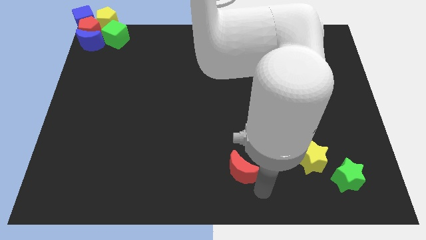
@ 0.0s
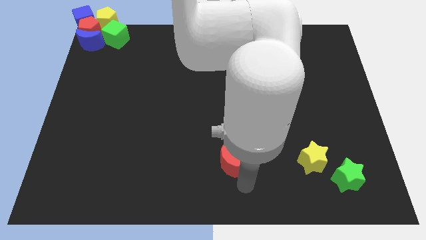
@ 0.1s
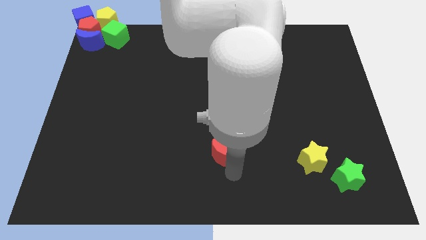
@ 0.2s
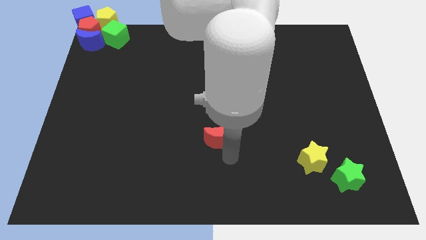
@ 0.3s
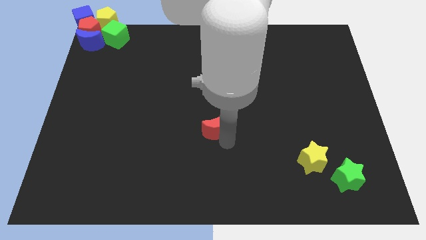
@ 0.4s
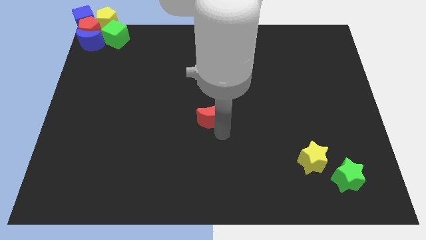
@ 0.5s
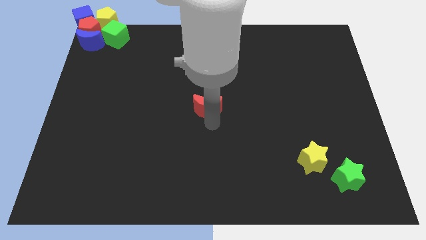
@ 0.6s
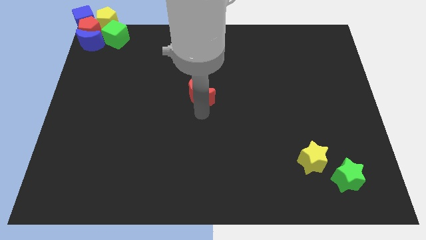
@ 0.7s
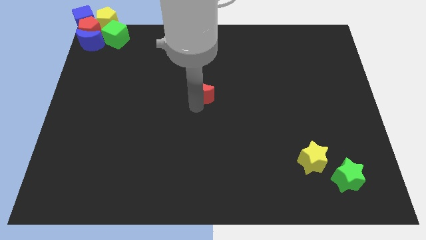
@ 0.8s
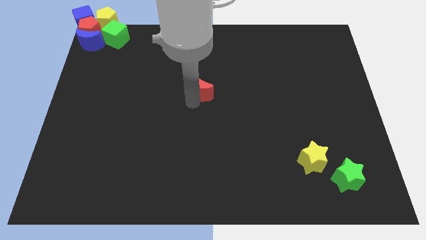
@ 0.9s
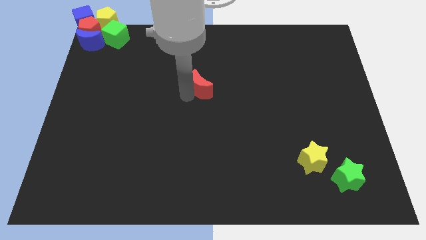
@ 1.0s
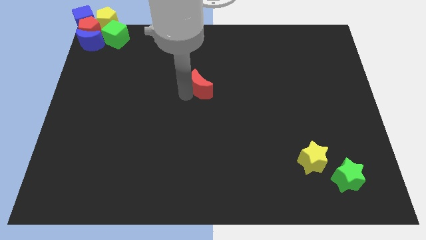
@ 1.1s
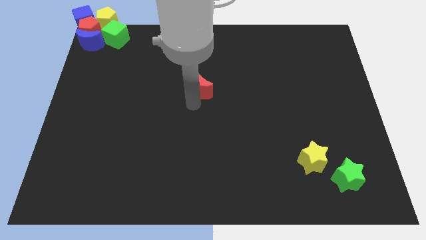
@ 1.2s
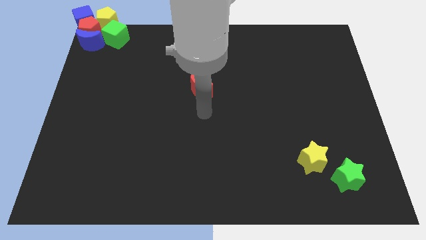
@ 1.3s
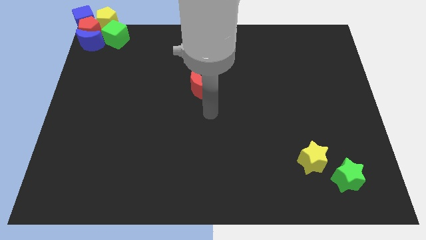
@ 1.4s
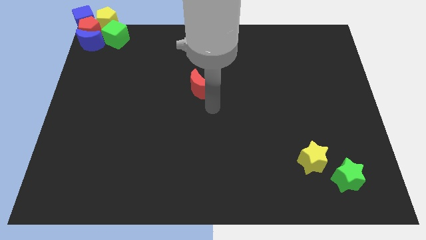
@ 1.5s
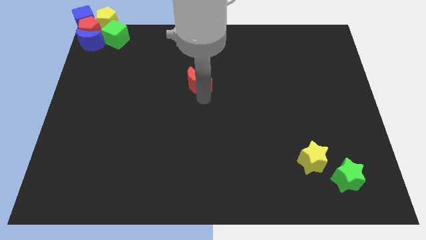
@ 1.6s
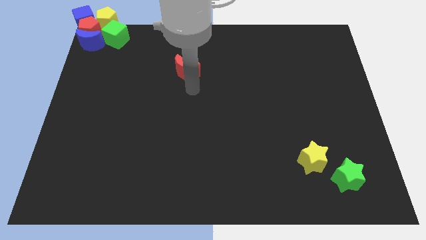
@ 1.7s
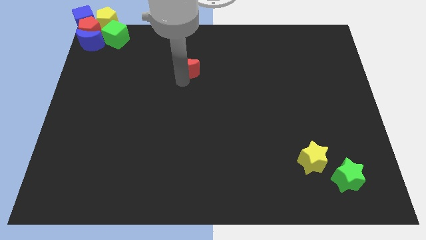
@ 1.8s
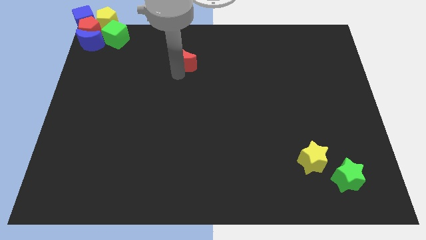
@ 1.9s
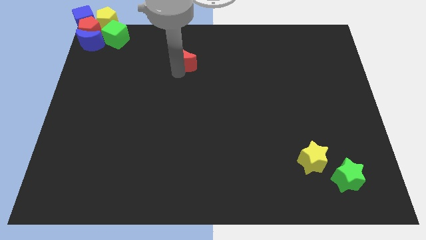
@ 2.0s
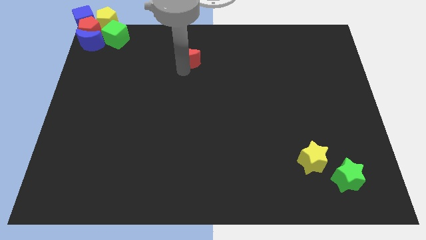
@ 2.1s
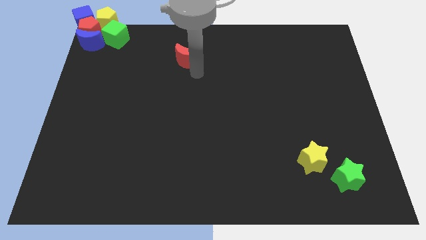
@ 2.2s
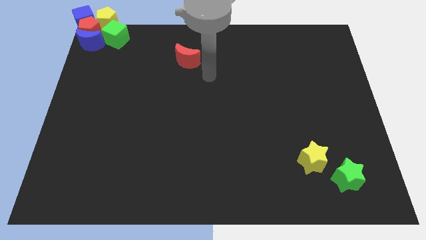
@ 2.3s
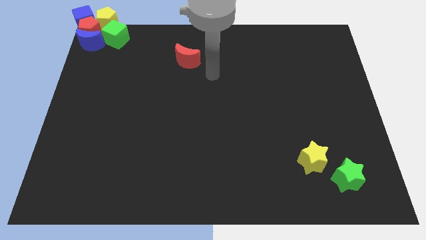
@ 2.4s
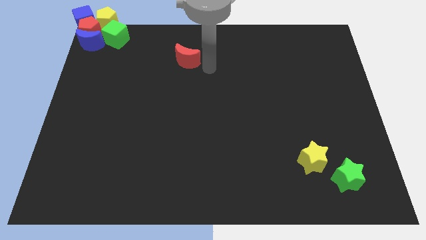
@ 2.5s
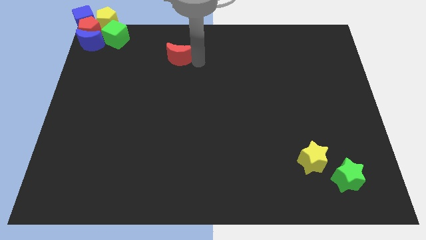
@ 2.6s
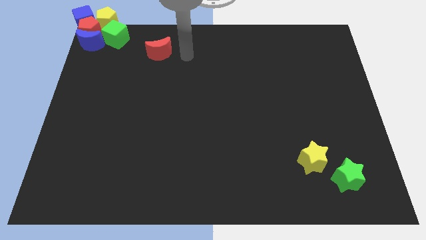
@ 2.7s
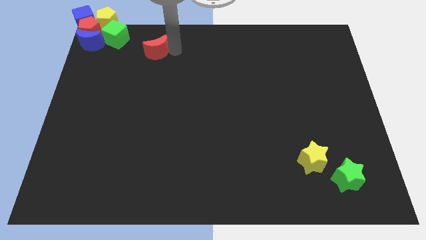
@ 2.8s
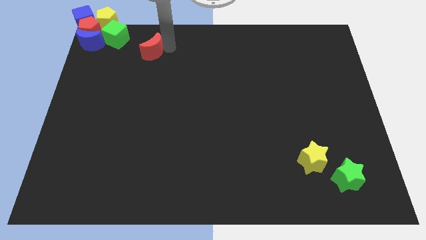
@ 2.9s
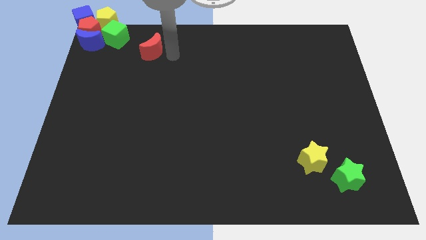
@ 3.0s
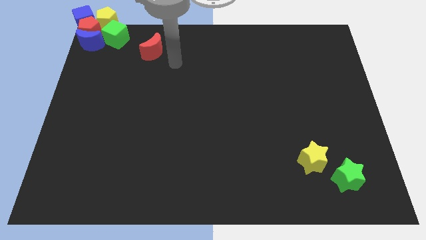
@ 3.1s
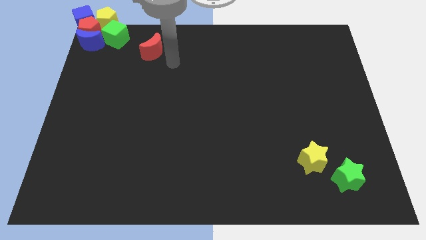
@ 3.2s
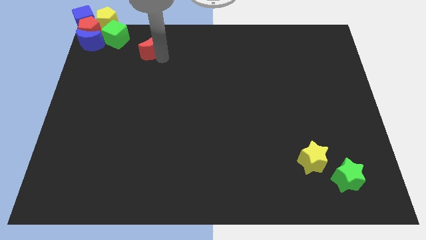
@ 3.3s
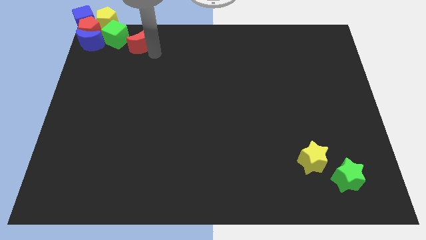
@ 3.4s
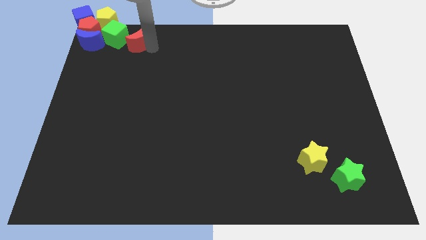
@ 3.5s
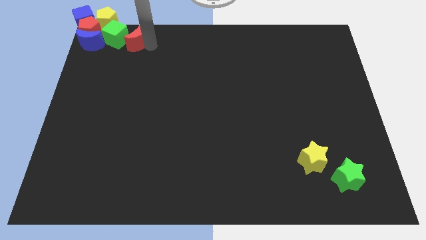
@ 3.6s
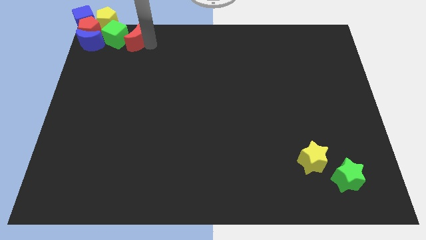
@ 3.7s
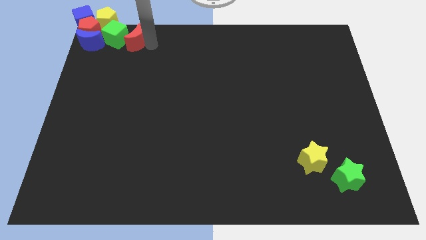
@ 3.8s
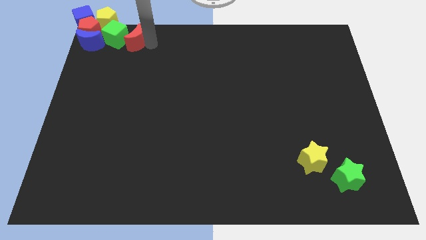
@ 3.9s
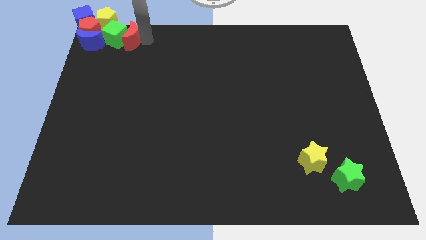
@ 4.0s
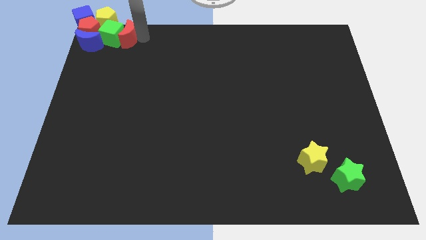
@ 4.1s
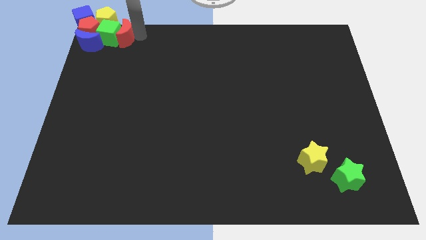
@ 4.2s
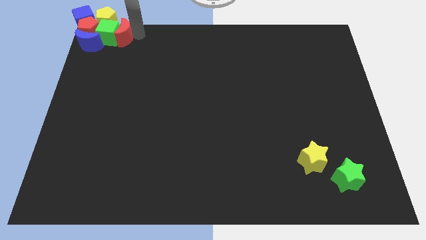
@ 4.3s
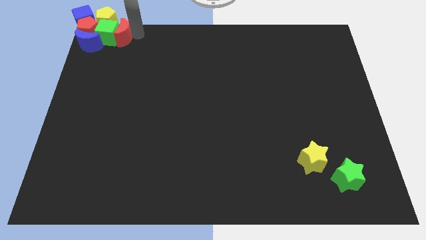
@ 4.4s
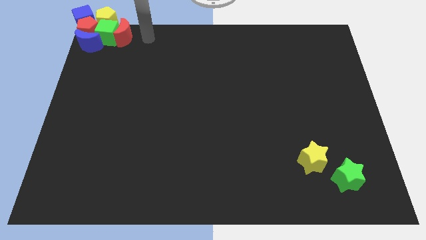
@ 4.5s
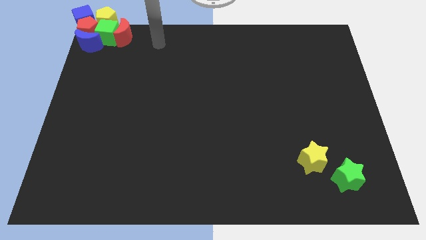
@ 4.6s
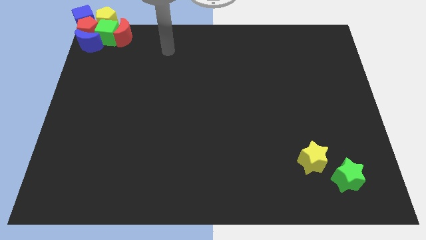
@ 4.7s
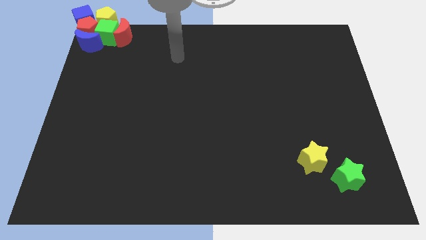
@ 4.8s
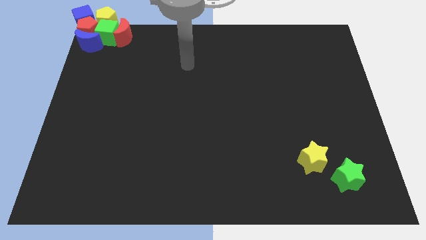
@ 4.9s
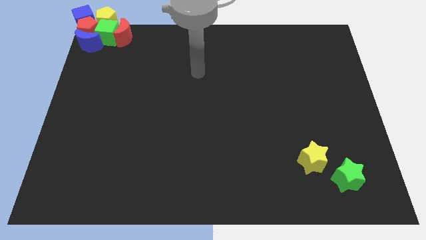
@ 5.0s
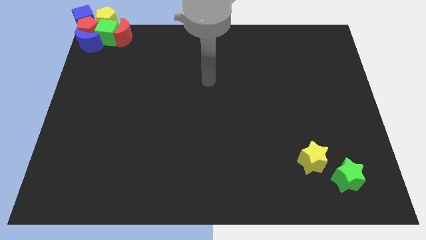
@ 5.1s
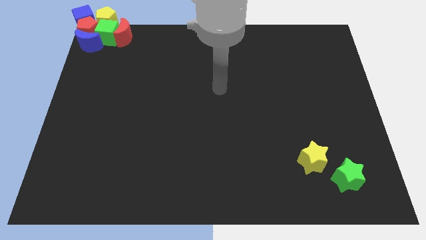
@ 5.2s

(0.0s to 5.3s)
move the red crescent to the right side of the green cube

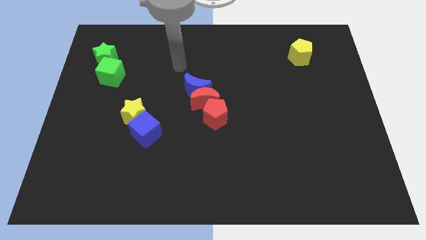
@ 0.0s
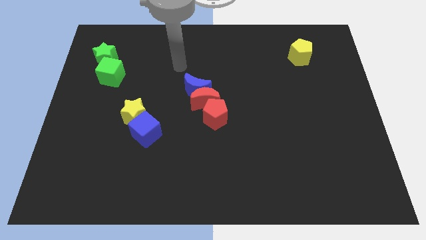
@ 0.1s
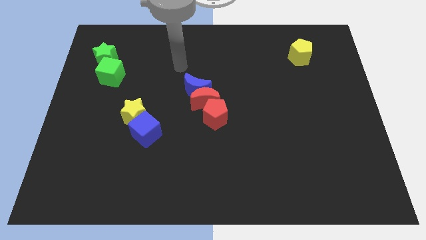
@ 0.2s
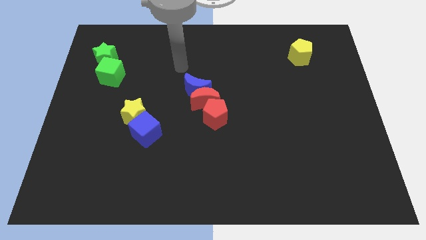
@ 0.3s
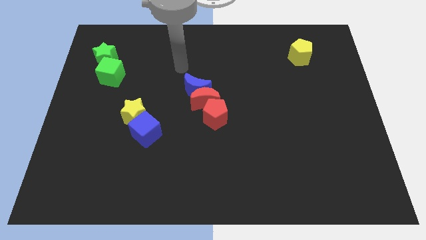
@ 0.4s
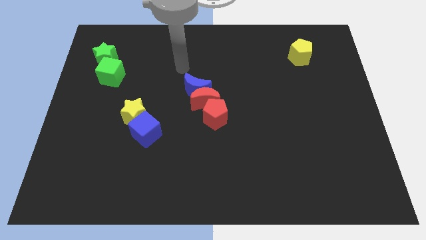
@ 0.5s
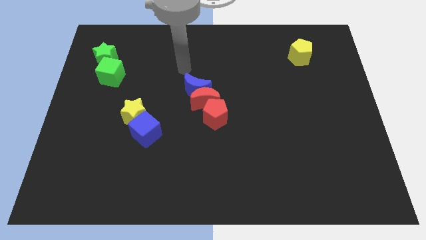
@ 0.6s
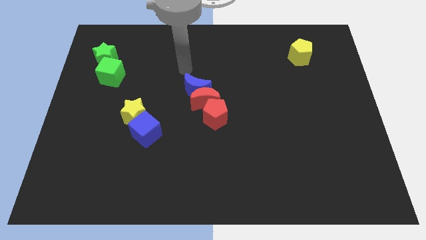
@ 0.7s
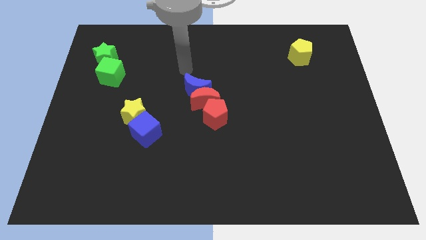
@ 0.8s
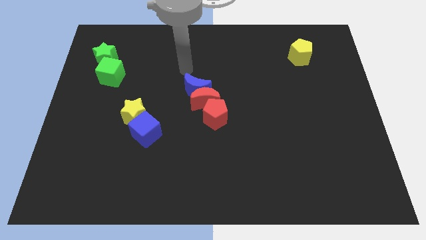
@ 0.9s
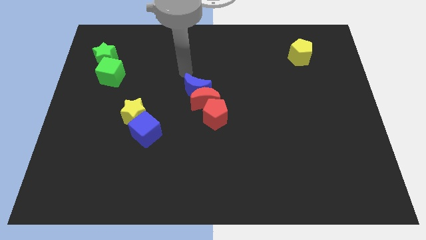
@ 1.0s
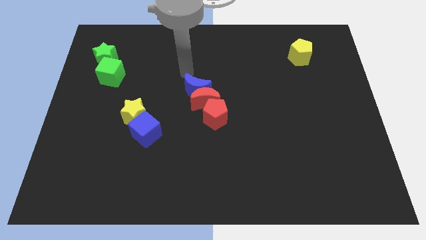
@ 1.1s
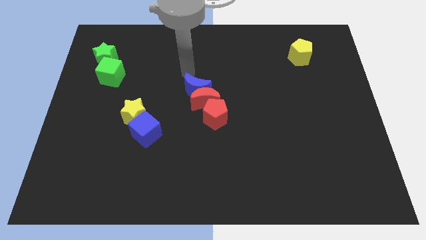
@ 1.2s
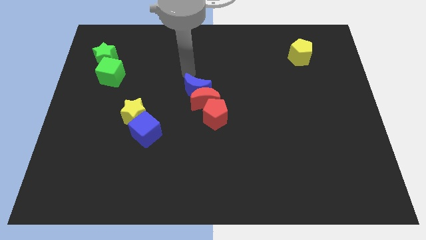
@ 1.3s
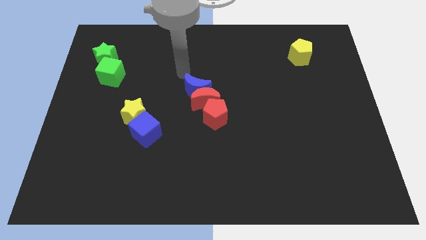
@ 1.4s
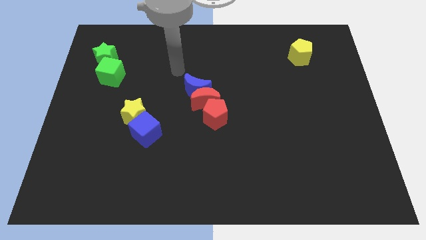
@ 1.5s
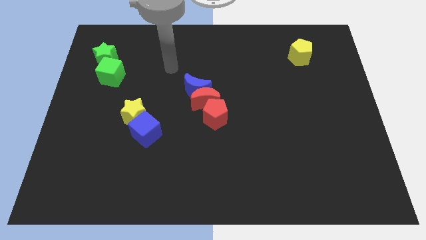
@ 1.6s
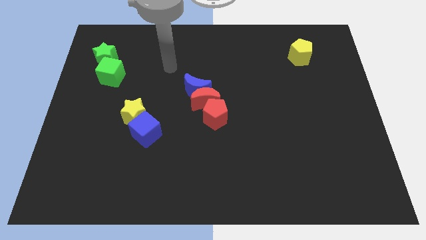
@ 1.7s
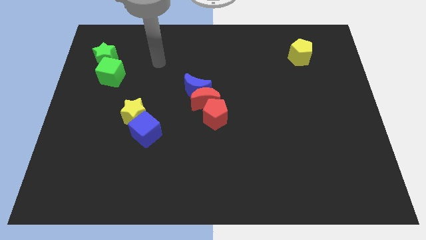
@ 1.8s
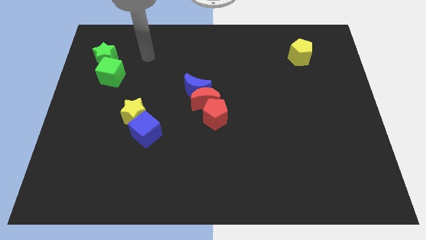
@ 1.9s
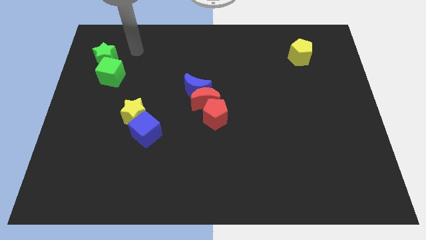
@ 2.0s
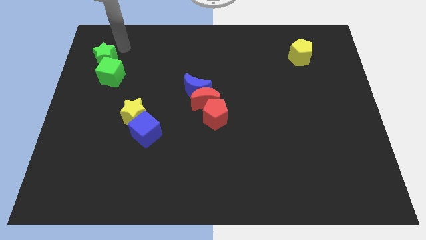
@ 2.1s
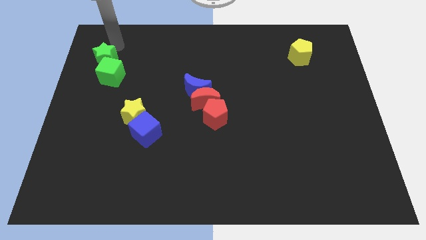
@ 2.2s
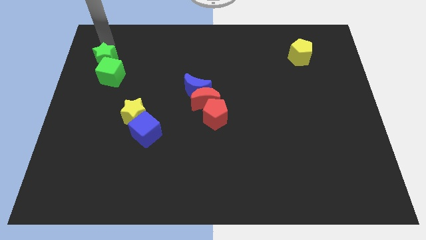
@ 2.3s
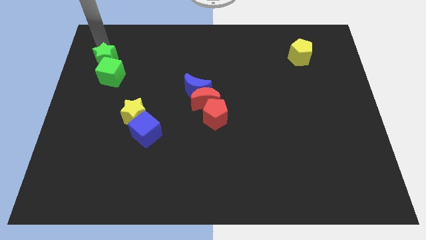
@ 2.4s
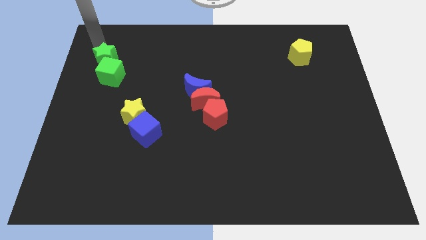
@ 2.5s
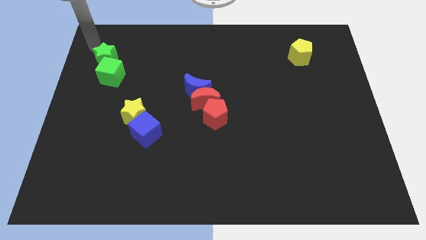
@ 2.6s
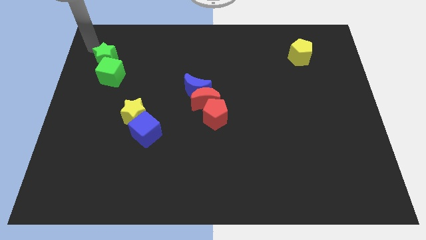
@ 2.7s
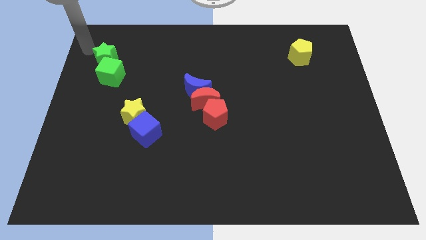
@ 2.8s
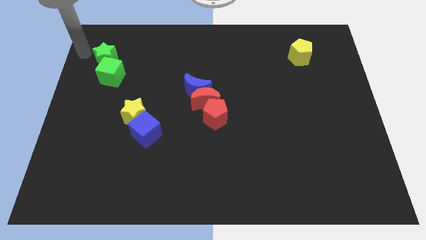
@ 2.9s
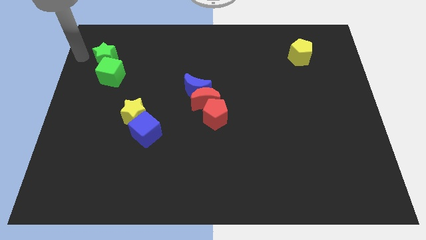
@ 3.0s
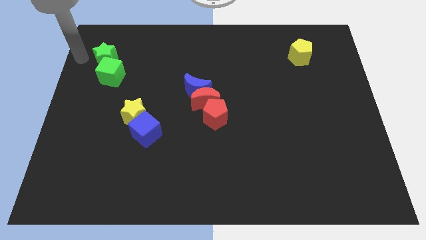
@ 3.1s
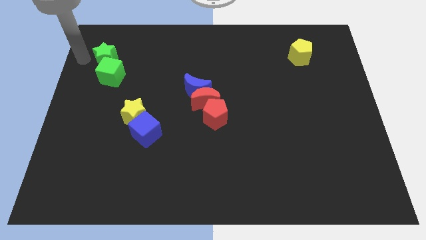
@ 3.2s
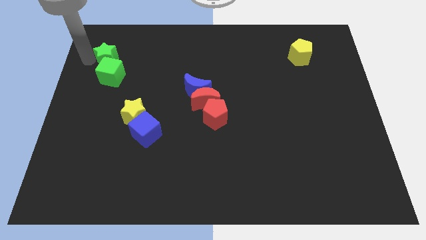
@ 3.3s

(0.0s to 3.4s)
move the arm from the center of the board to the top left corner

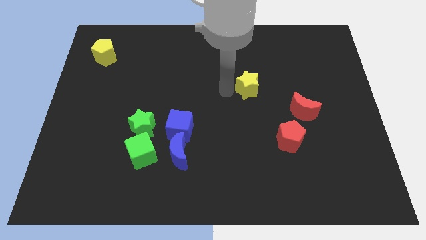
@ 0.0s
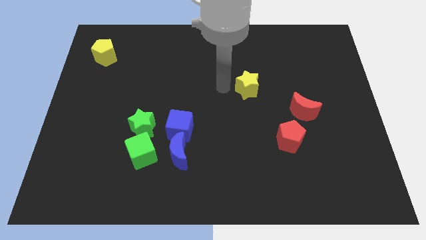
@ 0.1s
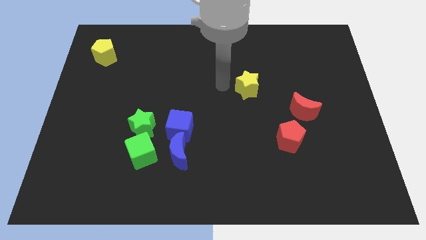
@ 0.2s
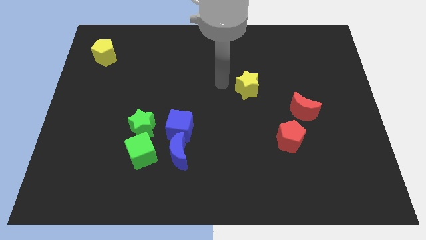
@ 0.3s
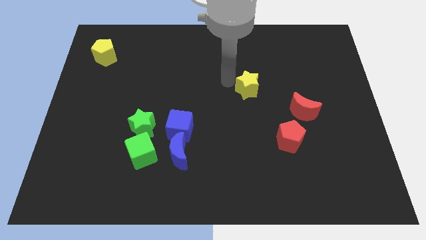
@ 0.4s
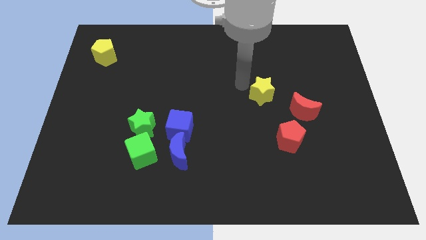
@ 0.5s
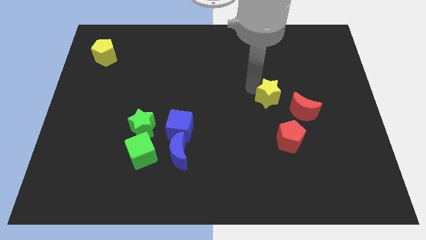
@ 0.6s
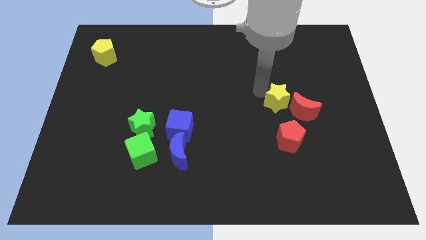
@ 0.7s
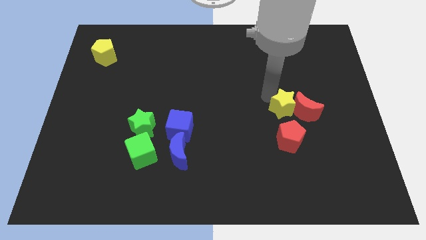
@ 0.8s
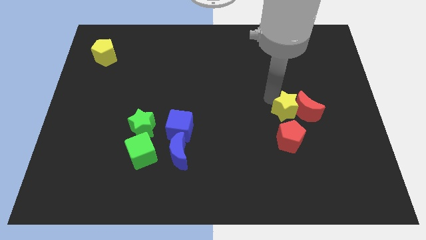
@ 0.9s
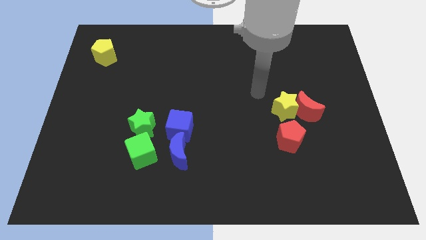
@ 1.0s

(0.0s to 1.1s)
push the yellow star into the red moon
